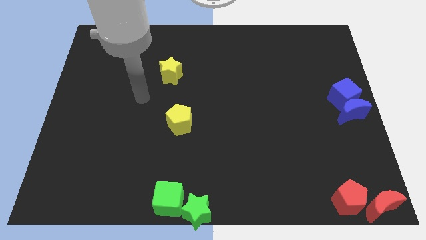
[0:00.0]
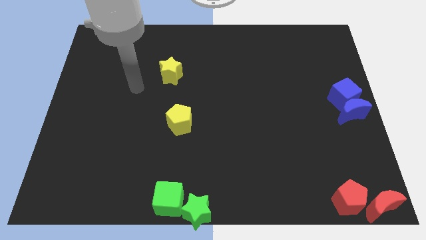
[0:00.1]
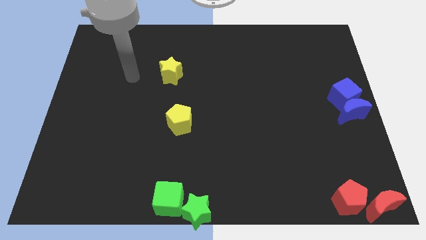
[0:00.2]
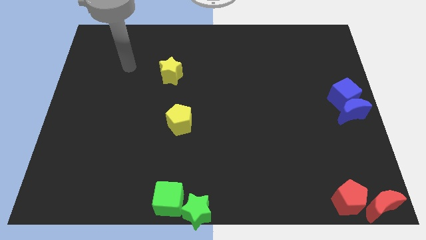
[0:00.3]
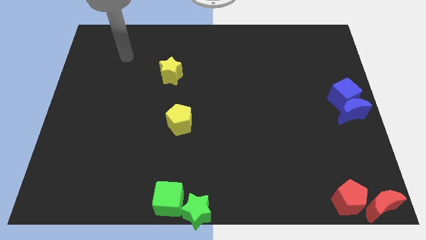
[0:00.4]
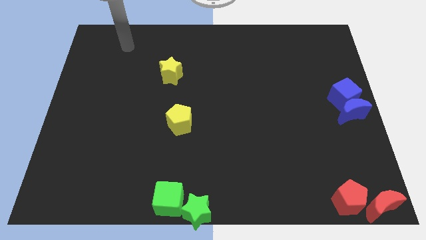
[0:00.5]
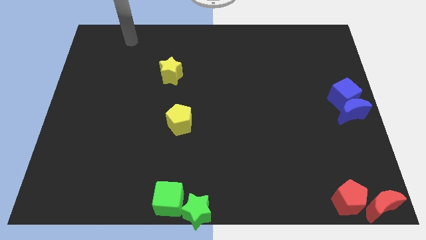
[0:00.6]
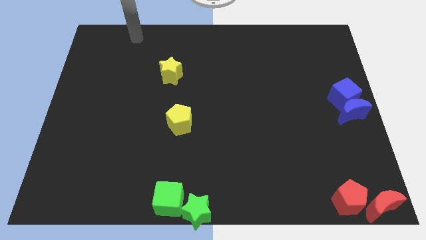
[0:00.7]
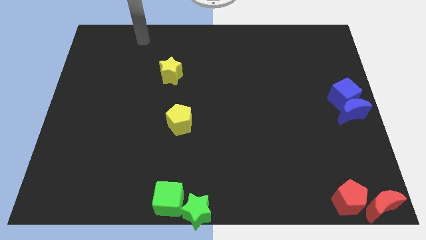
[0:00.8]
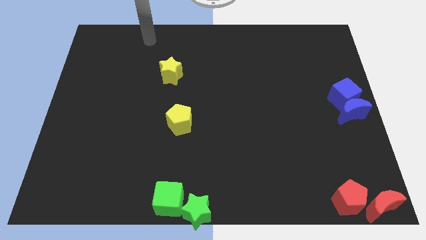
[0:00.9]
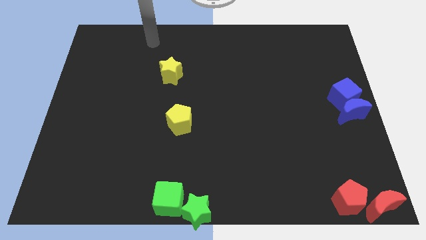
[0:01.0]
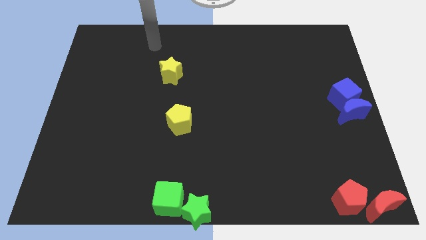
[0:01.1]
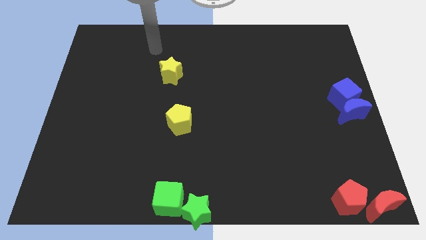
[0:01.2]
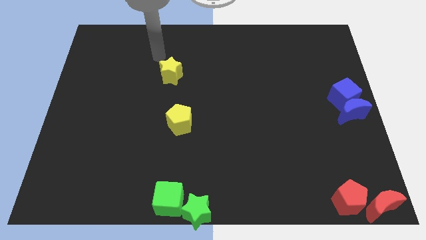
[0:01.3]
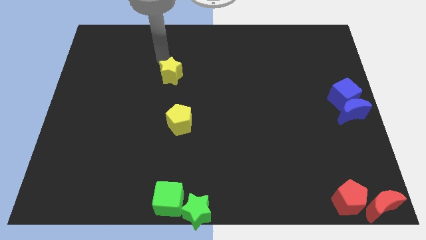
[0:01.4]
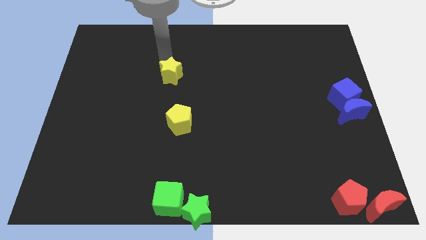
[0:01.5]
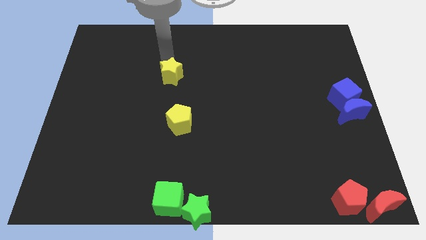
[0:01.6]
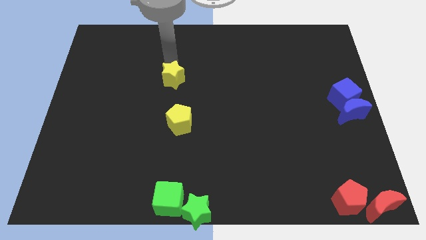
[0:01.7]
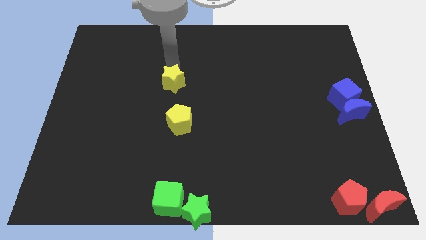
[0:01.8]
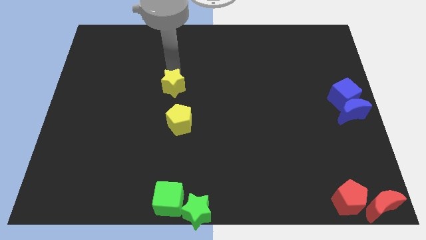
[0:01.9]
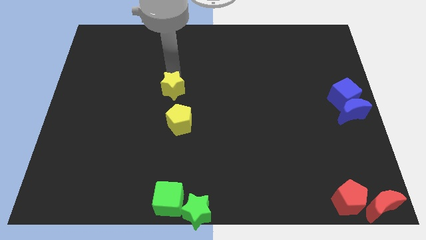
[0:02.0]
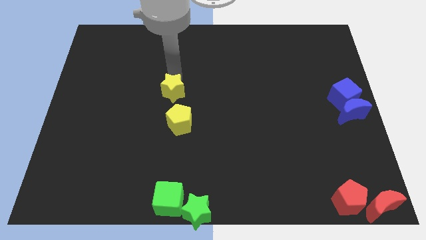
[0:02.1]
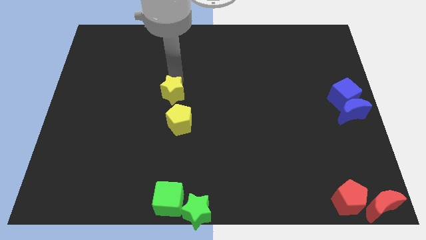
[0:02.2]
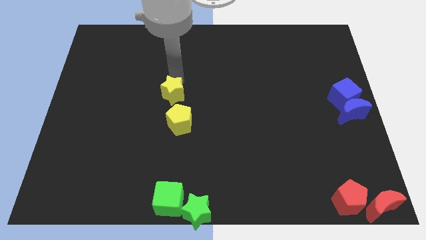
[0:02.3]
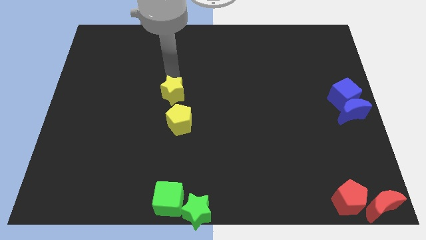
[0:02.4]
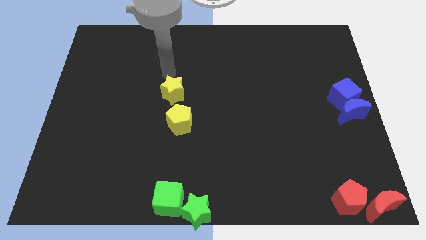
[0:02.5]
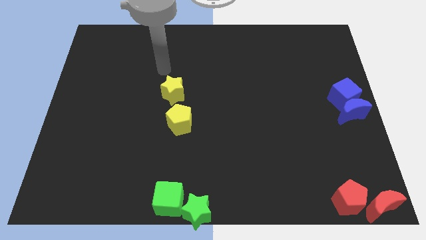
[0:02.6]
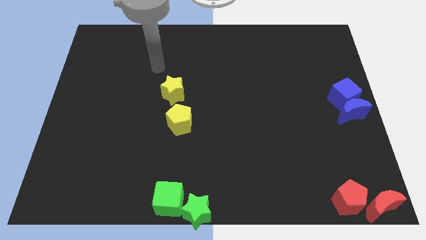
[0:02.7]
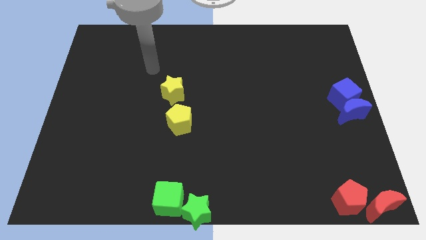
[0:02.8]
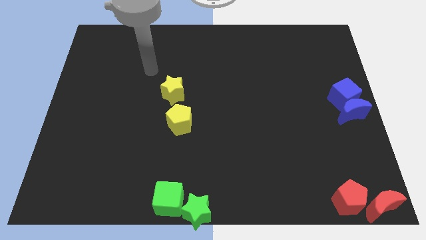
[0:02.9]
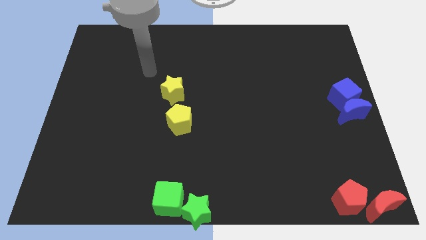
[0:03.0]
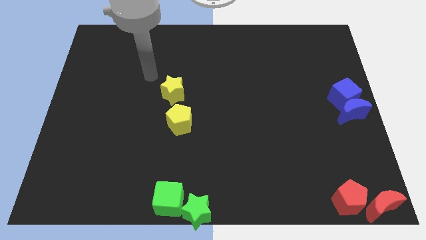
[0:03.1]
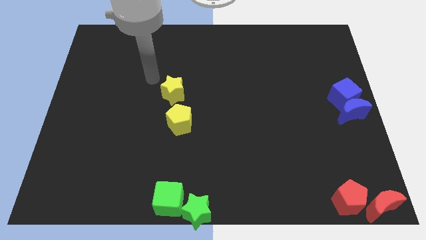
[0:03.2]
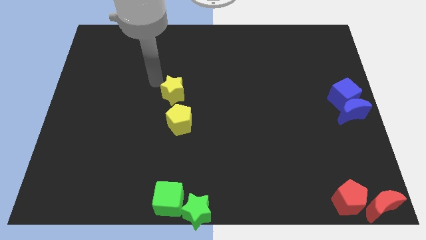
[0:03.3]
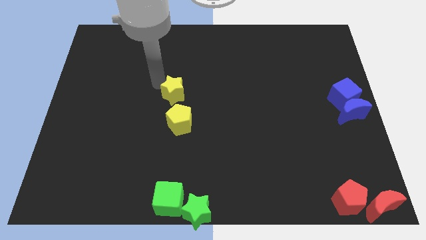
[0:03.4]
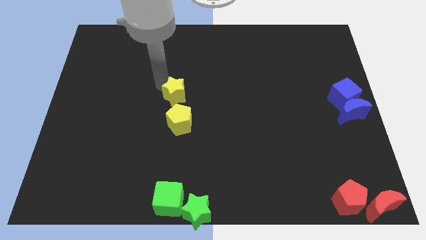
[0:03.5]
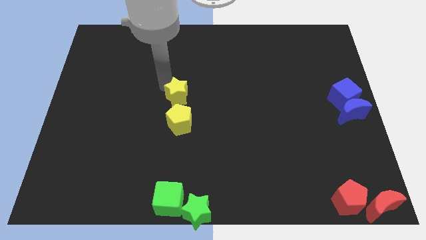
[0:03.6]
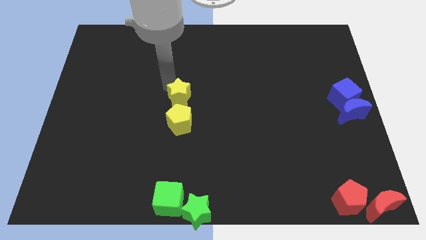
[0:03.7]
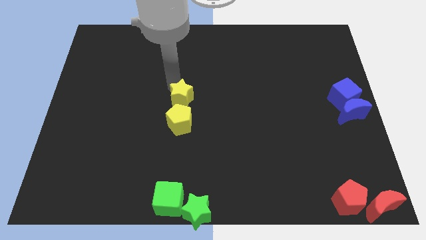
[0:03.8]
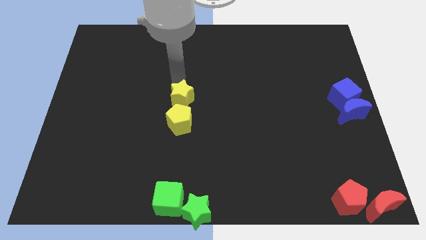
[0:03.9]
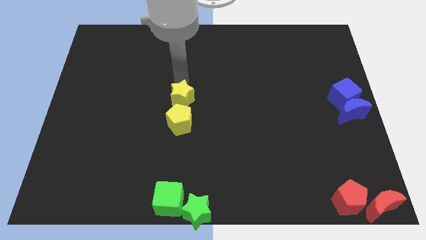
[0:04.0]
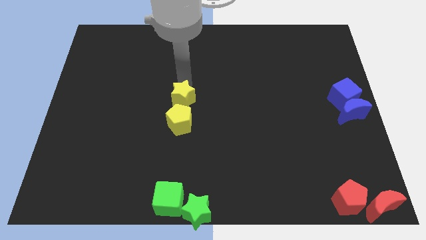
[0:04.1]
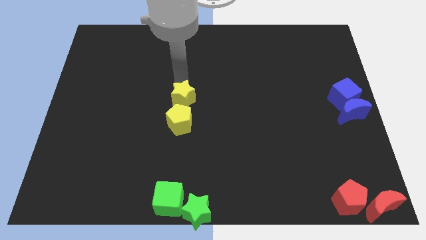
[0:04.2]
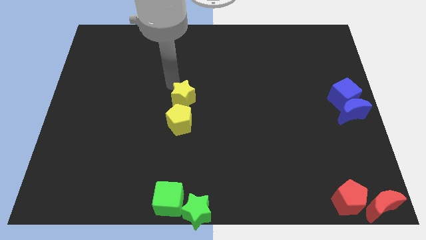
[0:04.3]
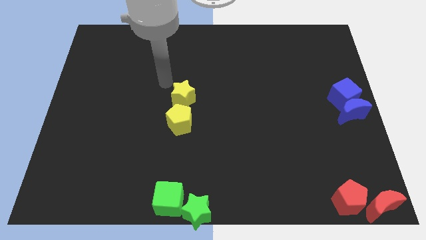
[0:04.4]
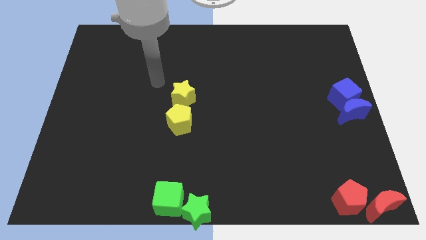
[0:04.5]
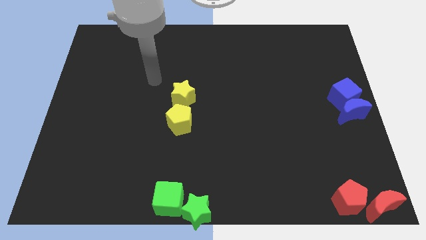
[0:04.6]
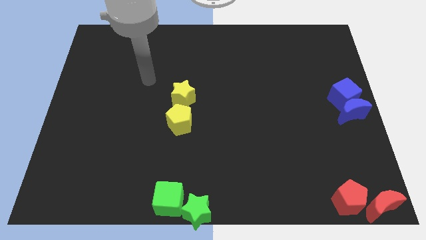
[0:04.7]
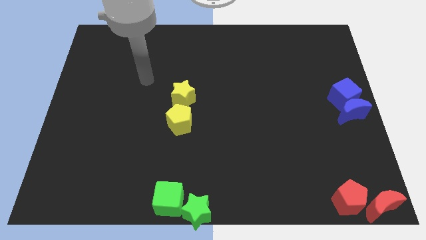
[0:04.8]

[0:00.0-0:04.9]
move the yellow star to the top of the yellow pentagon

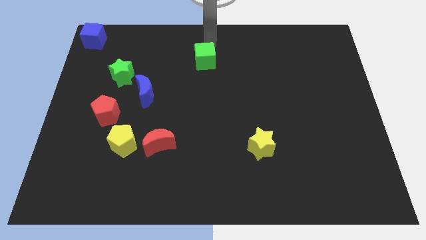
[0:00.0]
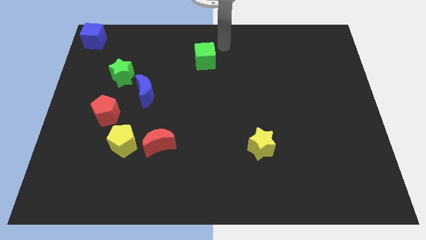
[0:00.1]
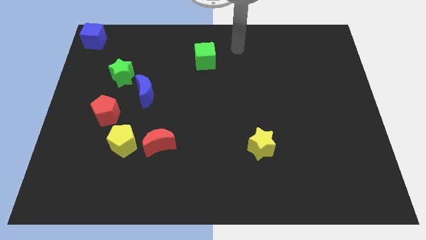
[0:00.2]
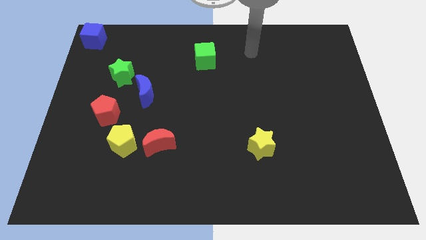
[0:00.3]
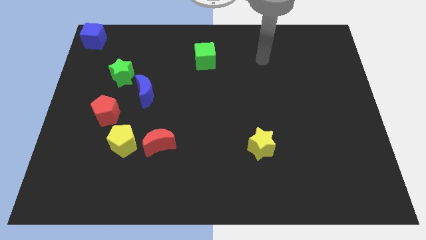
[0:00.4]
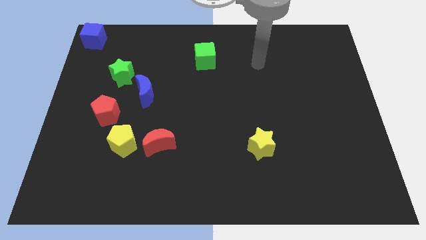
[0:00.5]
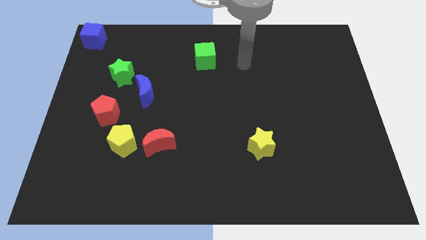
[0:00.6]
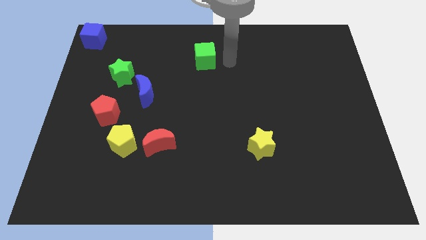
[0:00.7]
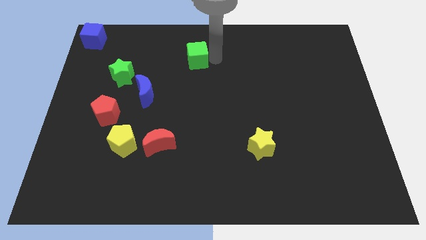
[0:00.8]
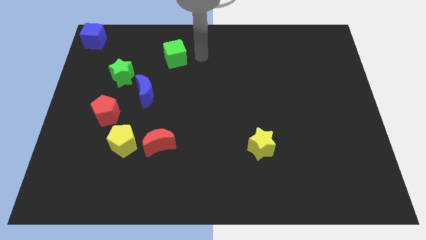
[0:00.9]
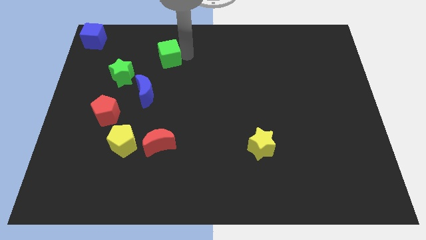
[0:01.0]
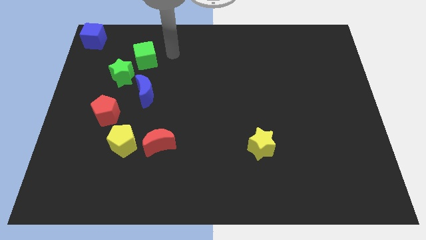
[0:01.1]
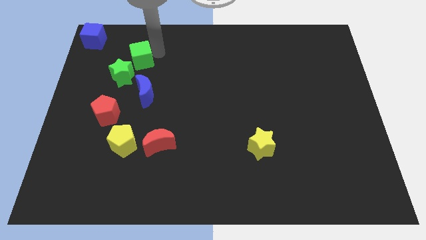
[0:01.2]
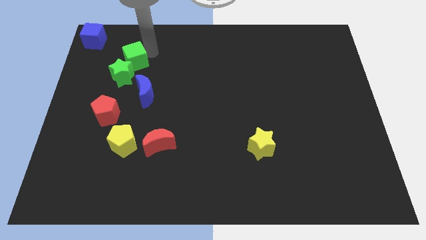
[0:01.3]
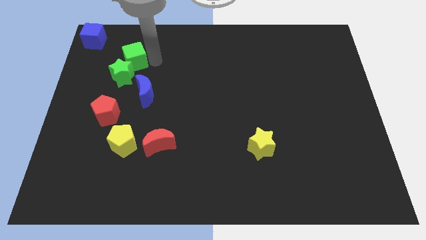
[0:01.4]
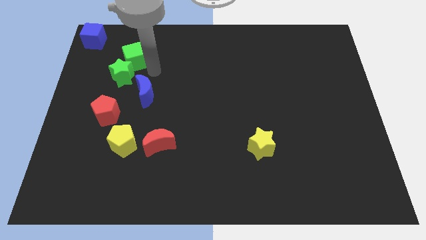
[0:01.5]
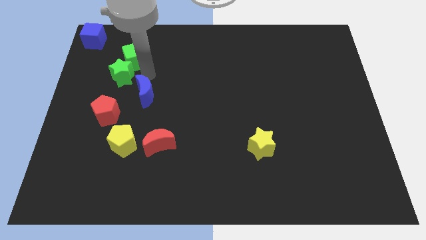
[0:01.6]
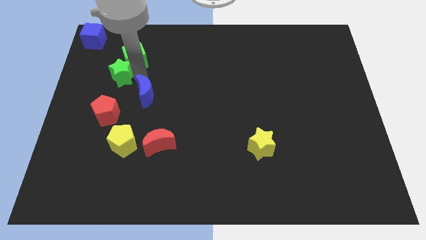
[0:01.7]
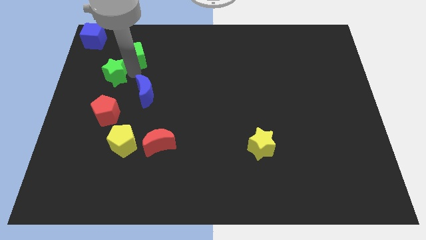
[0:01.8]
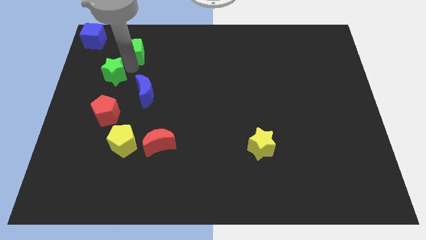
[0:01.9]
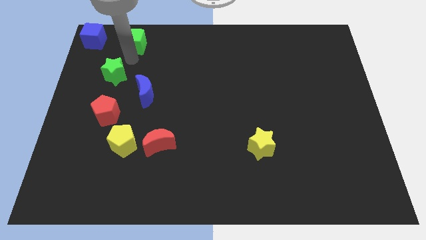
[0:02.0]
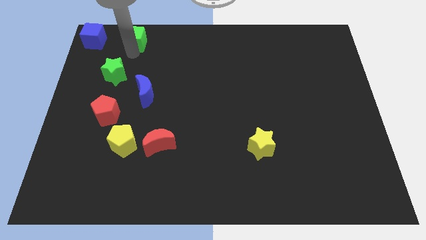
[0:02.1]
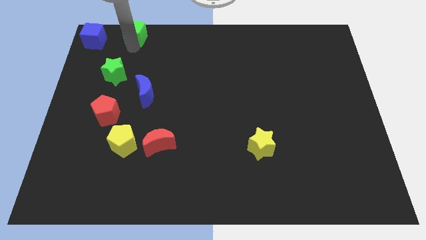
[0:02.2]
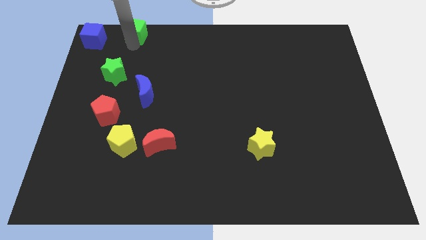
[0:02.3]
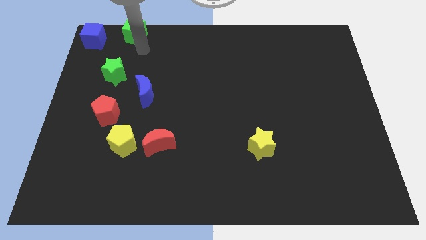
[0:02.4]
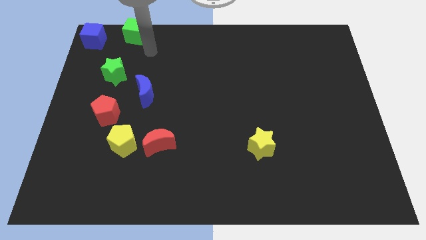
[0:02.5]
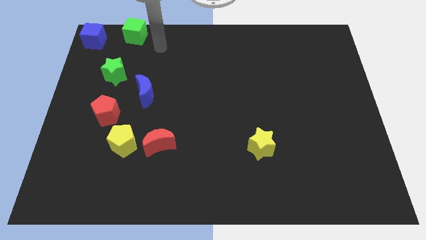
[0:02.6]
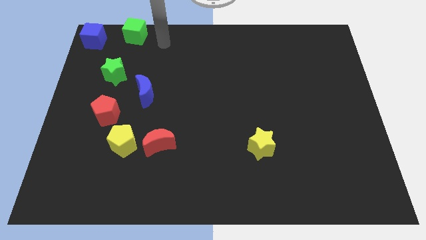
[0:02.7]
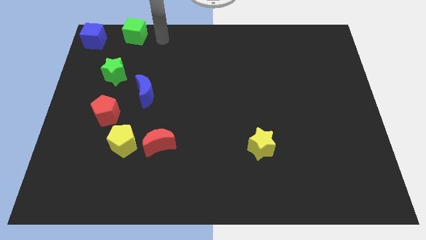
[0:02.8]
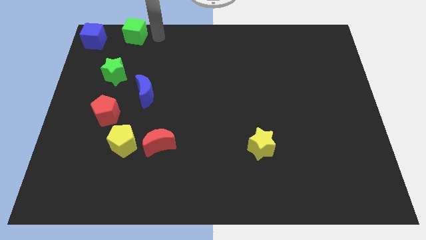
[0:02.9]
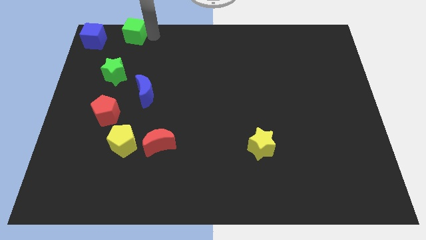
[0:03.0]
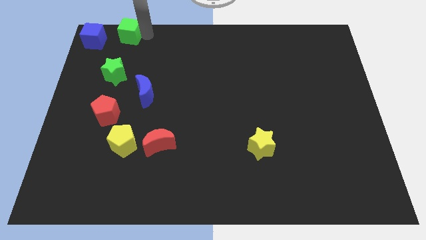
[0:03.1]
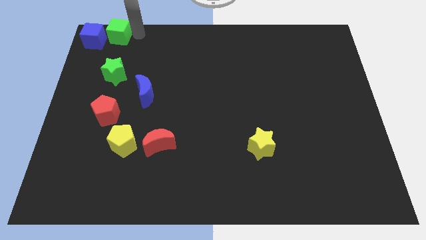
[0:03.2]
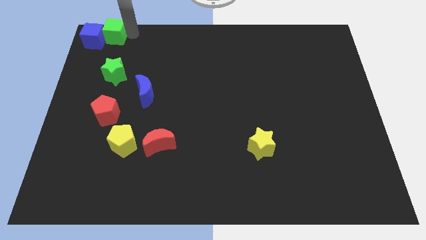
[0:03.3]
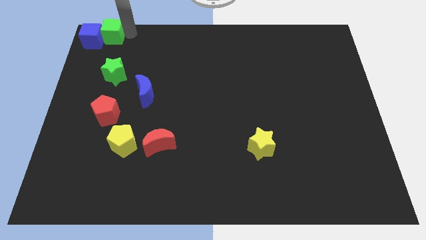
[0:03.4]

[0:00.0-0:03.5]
push the green cube into the blue cube

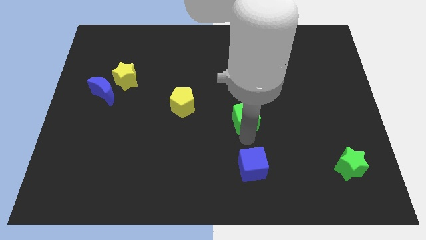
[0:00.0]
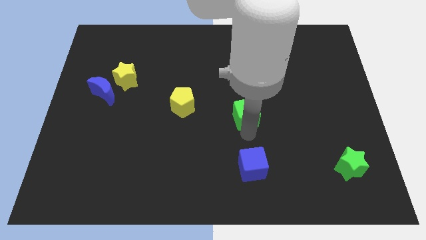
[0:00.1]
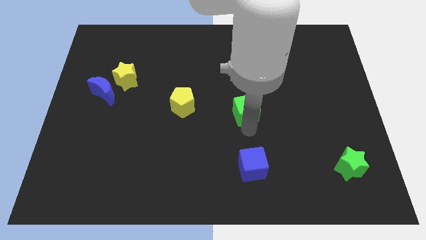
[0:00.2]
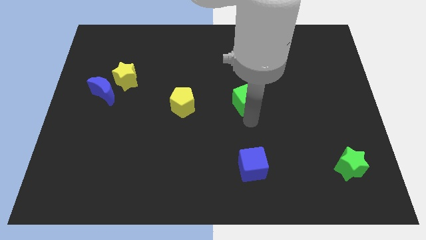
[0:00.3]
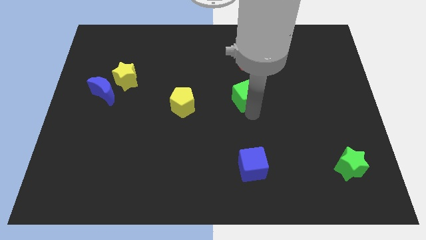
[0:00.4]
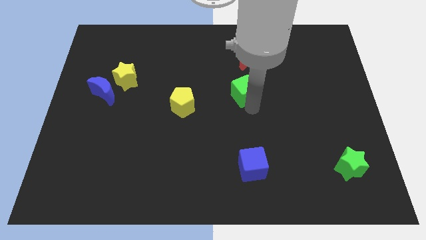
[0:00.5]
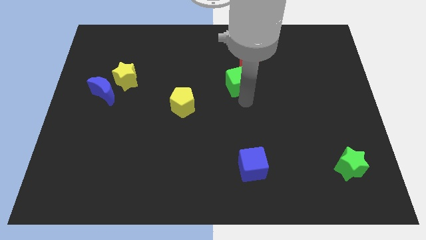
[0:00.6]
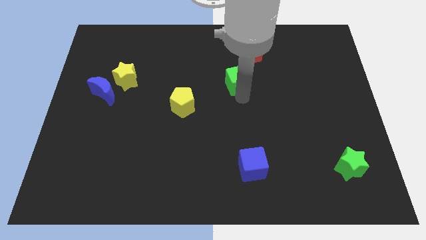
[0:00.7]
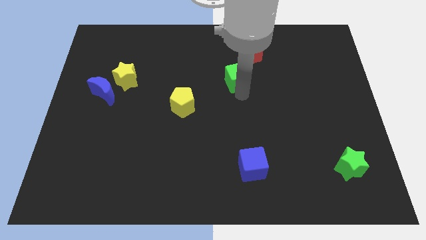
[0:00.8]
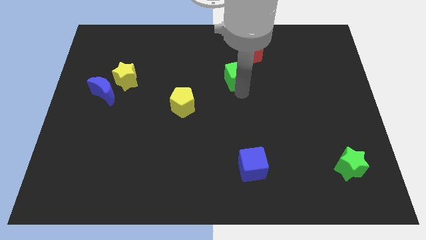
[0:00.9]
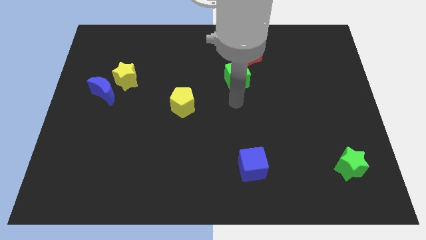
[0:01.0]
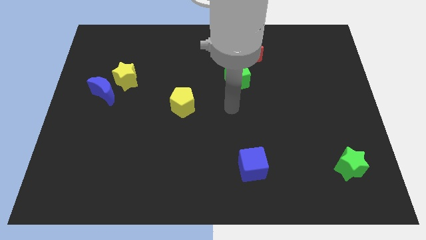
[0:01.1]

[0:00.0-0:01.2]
place green cube below the red moon
